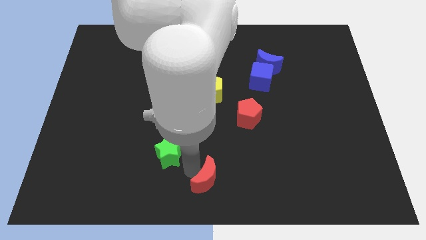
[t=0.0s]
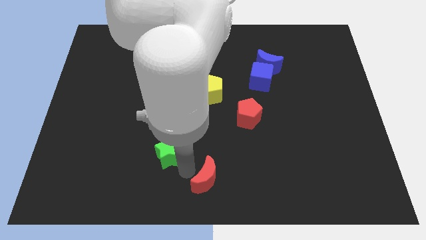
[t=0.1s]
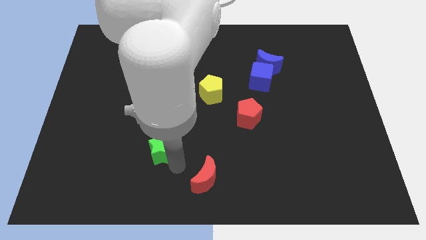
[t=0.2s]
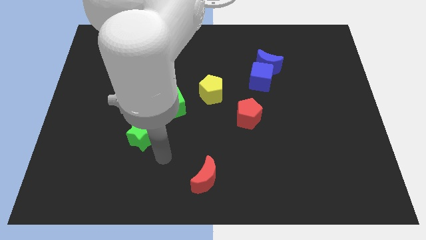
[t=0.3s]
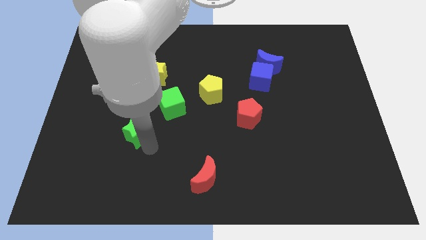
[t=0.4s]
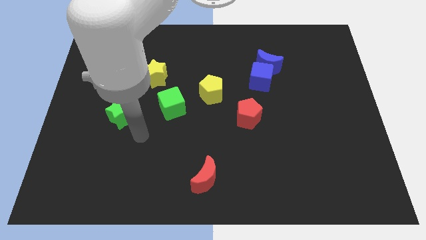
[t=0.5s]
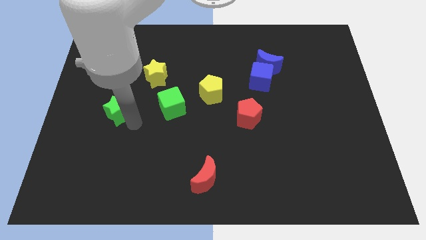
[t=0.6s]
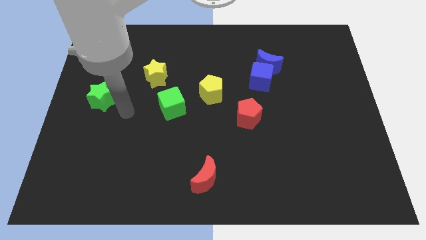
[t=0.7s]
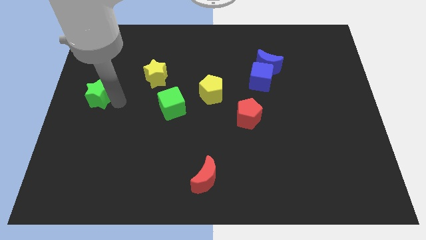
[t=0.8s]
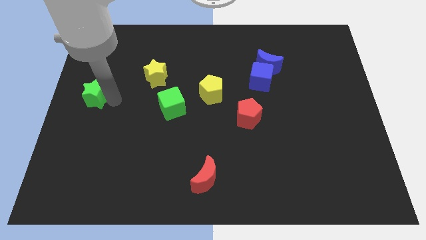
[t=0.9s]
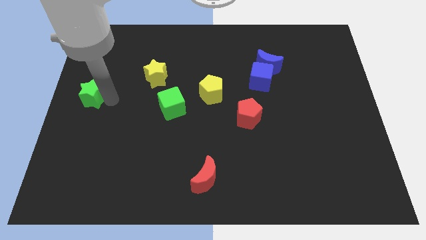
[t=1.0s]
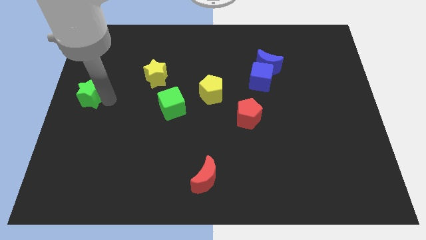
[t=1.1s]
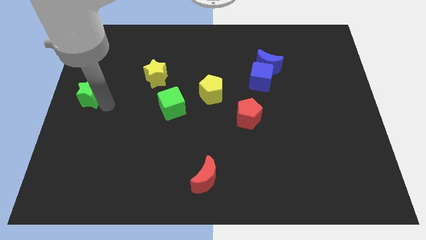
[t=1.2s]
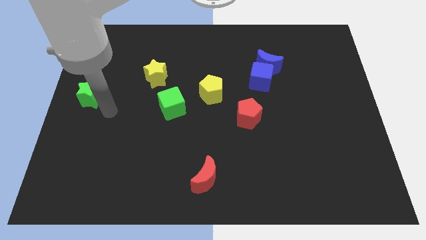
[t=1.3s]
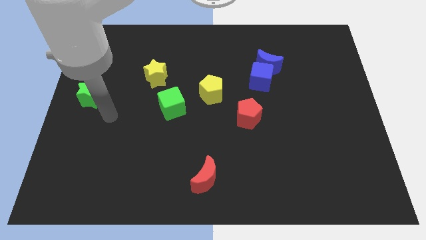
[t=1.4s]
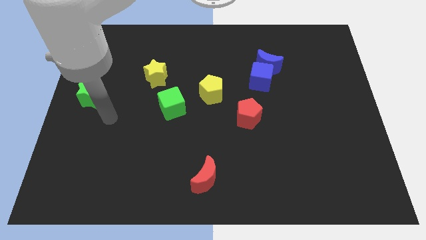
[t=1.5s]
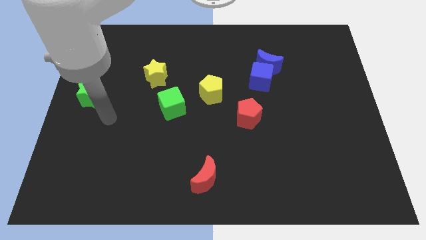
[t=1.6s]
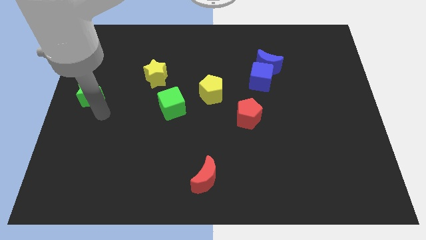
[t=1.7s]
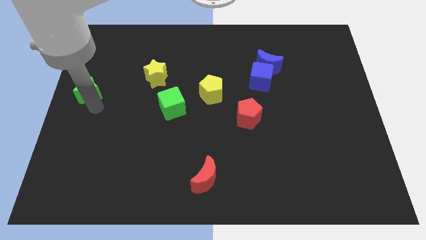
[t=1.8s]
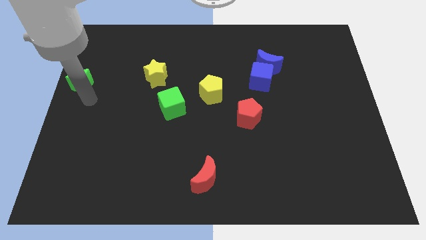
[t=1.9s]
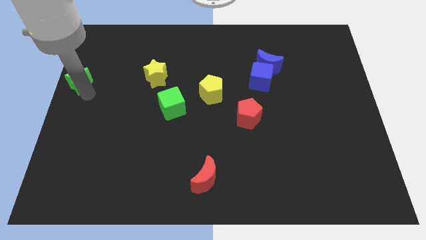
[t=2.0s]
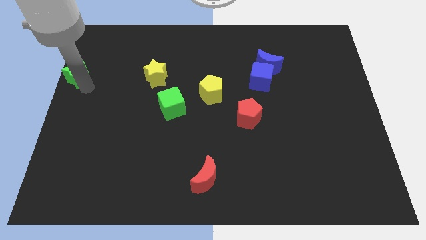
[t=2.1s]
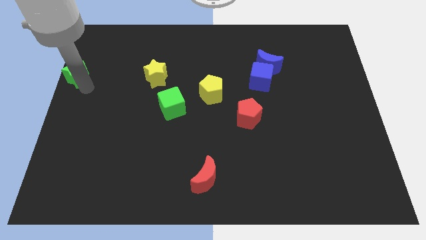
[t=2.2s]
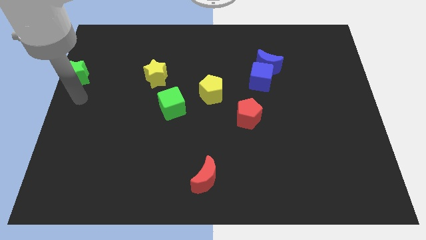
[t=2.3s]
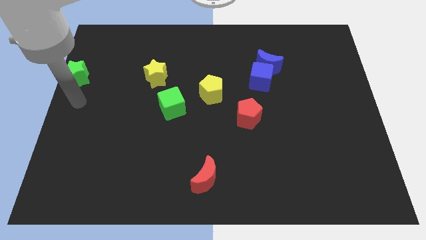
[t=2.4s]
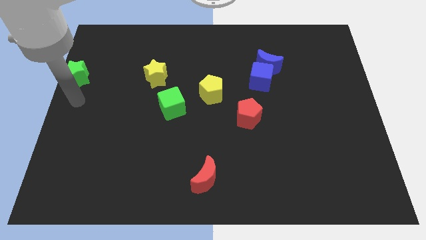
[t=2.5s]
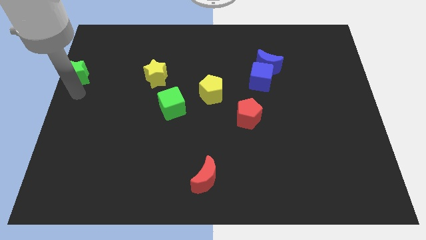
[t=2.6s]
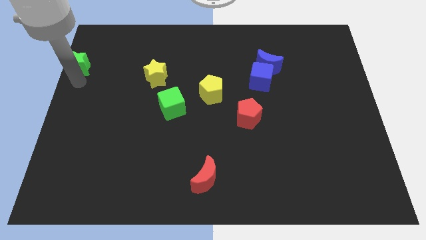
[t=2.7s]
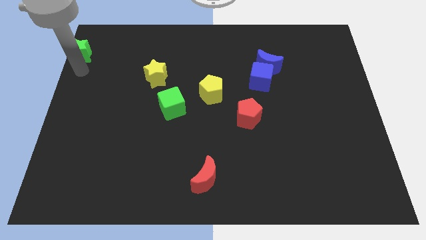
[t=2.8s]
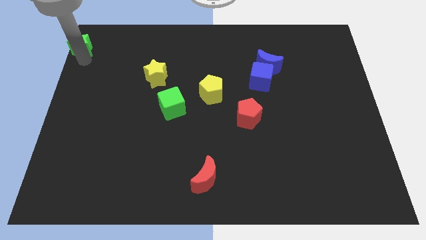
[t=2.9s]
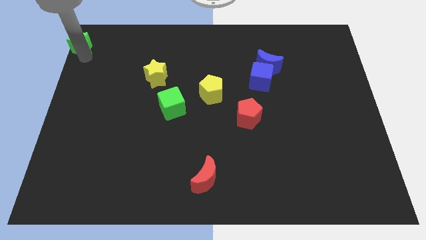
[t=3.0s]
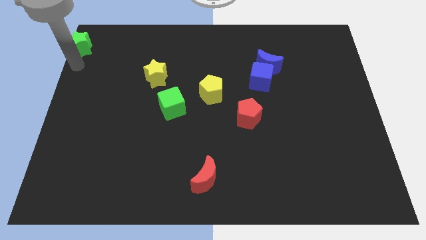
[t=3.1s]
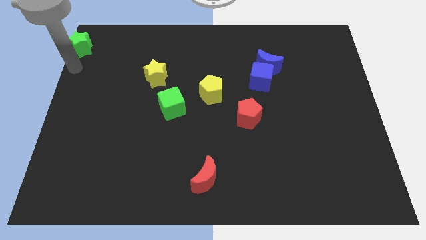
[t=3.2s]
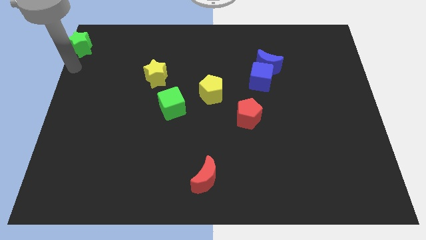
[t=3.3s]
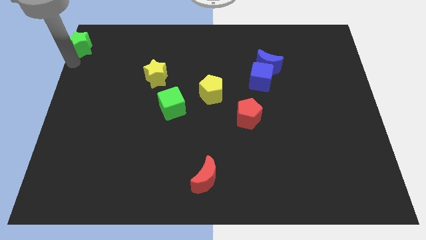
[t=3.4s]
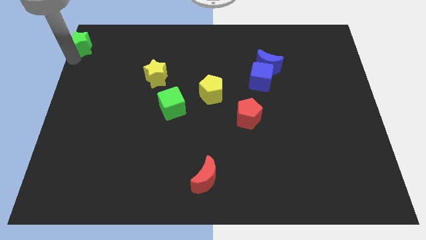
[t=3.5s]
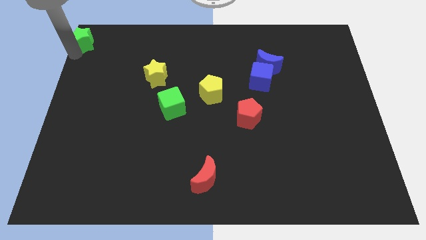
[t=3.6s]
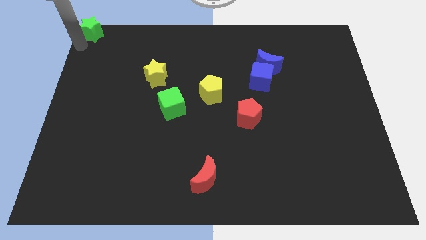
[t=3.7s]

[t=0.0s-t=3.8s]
move the green star to the top left of the board

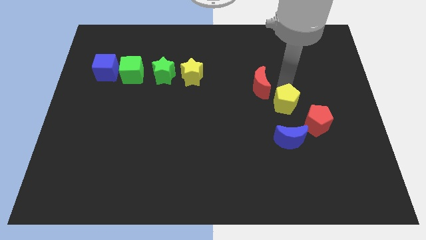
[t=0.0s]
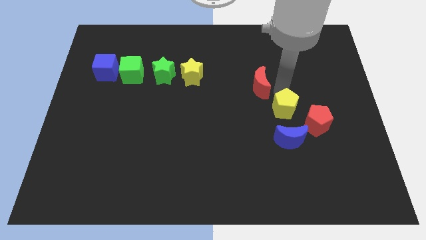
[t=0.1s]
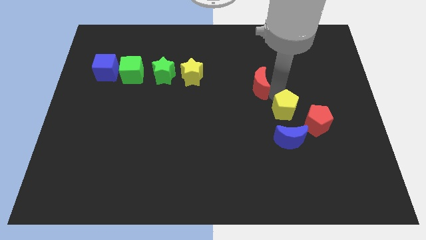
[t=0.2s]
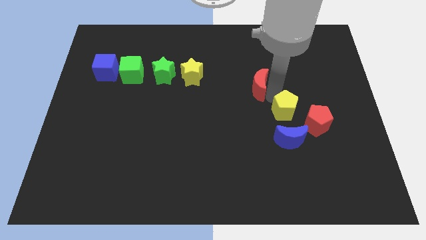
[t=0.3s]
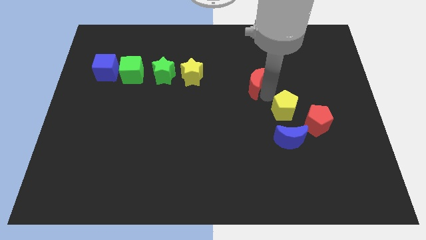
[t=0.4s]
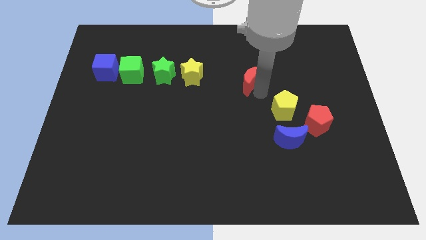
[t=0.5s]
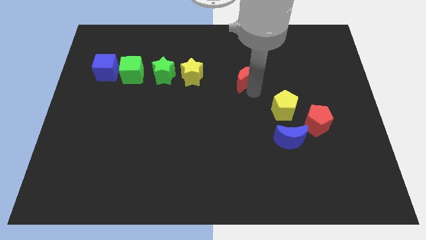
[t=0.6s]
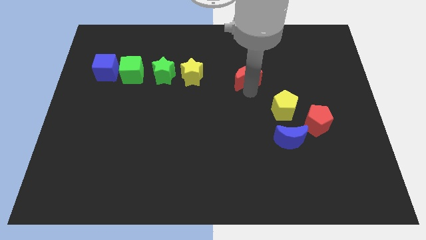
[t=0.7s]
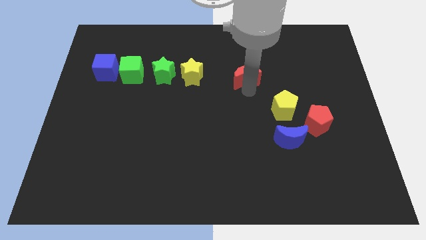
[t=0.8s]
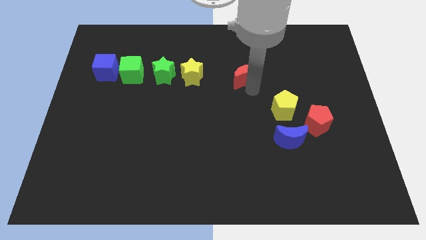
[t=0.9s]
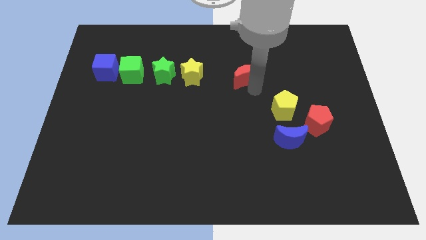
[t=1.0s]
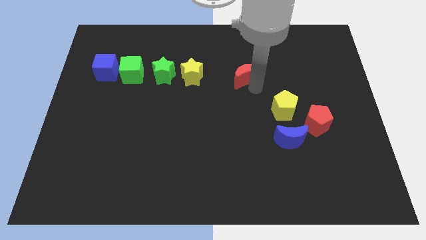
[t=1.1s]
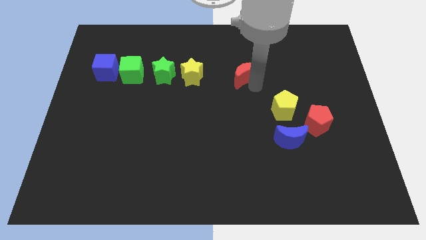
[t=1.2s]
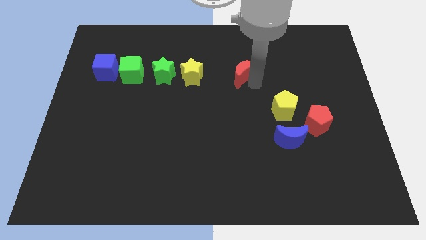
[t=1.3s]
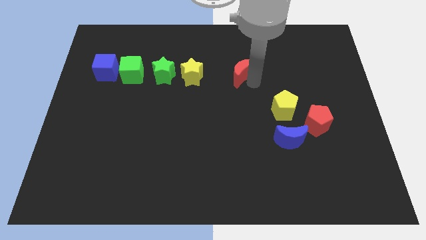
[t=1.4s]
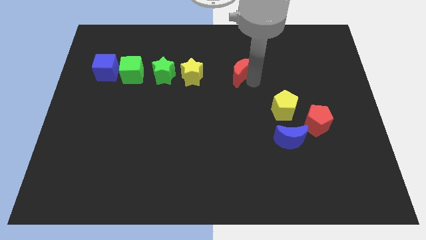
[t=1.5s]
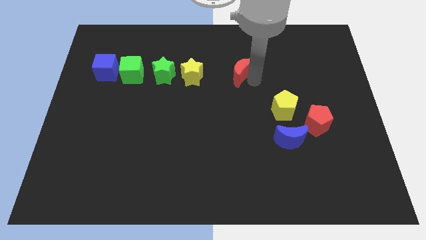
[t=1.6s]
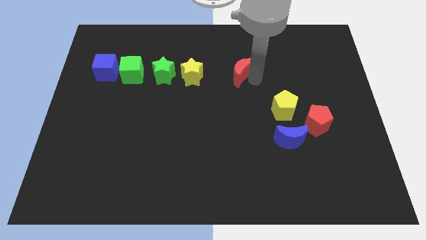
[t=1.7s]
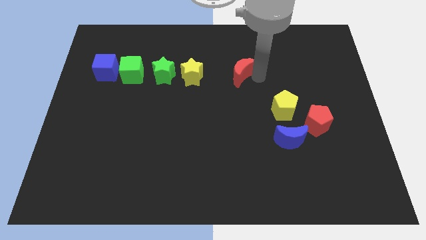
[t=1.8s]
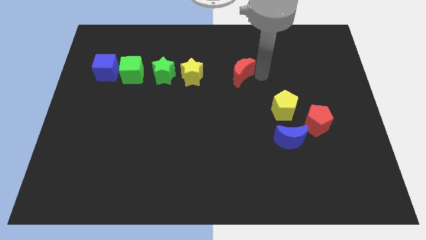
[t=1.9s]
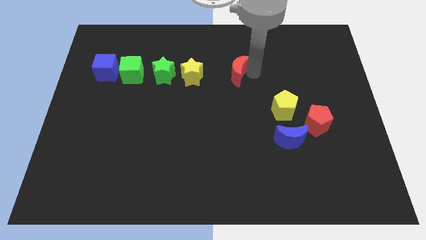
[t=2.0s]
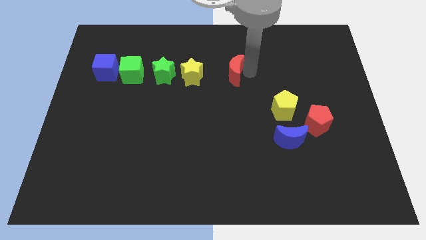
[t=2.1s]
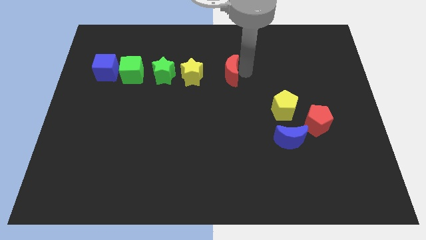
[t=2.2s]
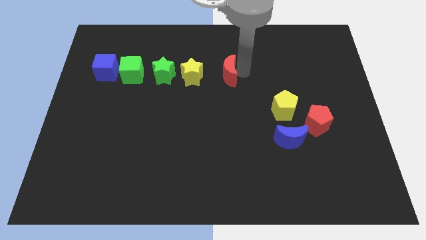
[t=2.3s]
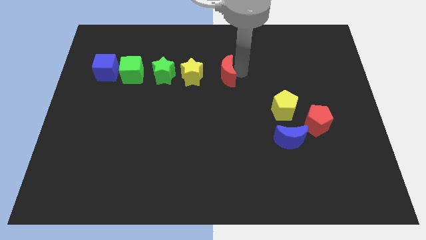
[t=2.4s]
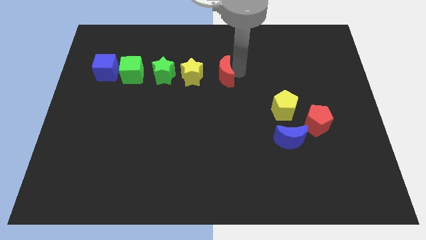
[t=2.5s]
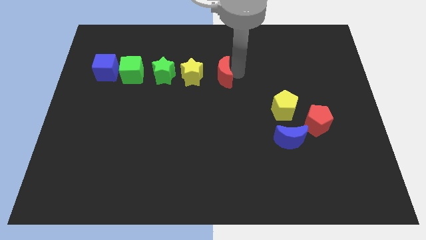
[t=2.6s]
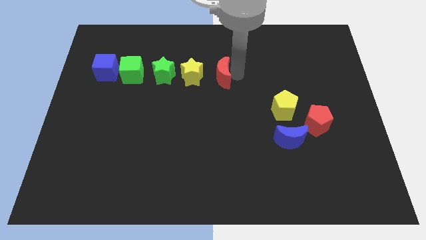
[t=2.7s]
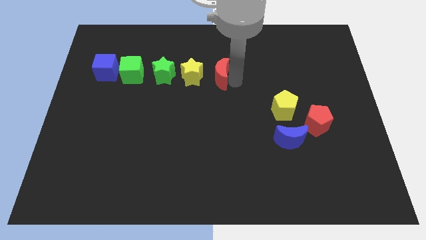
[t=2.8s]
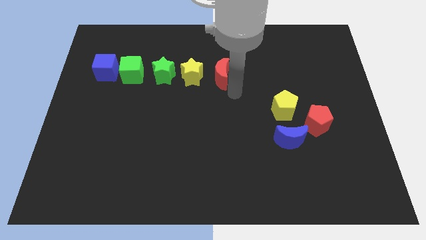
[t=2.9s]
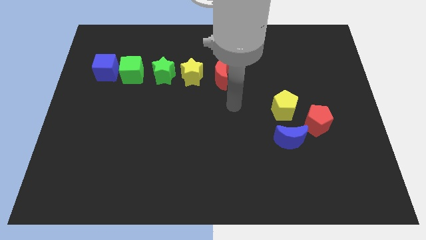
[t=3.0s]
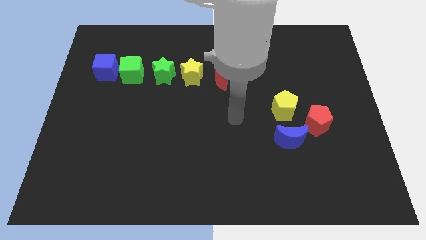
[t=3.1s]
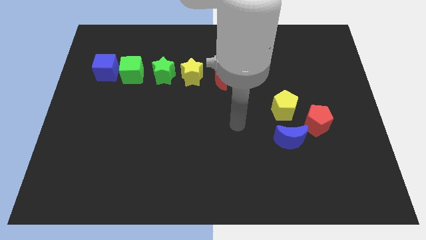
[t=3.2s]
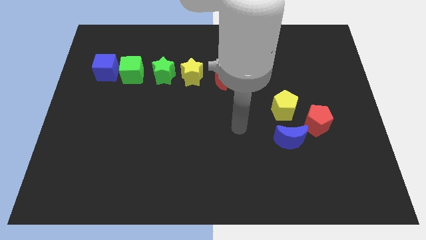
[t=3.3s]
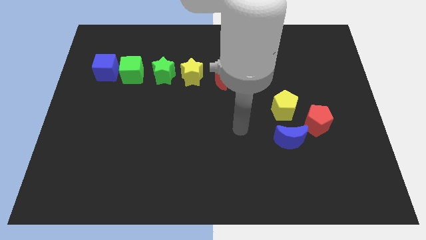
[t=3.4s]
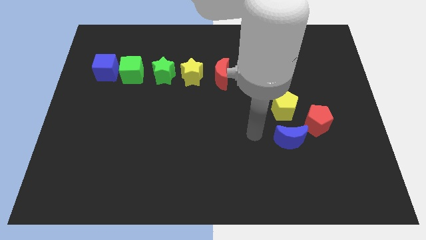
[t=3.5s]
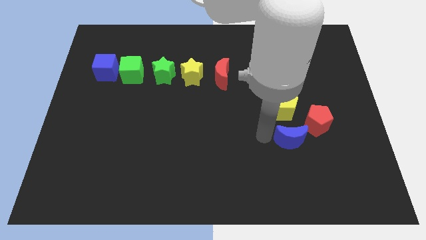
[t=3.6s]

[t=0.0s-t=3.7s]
place the red moon beside the yellow star to form a line

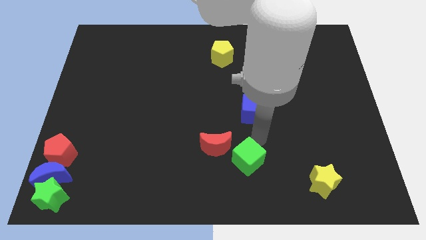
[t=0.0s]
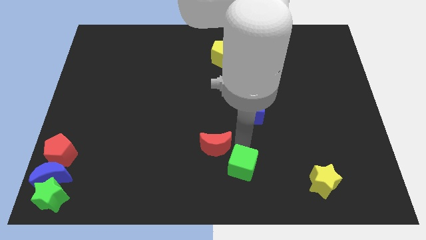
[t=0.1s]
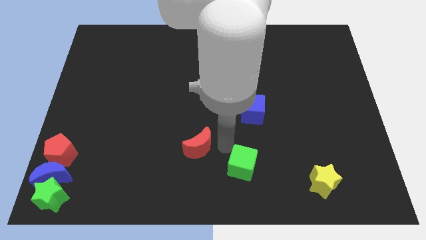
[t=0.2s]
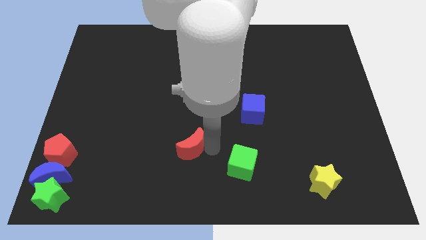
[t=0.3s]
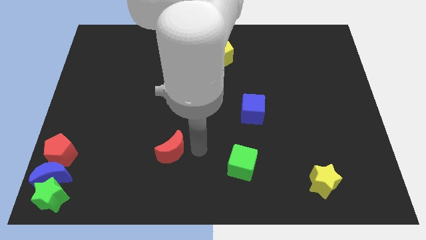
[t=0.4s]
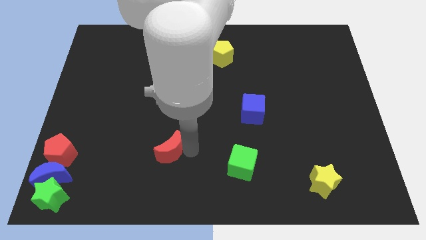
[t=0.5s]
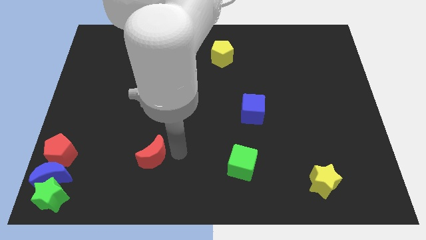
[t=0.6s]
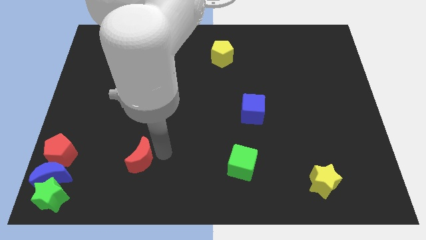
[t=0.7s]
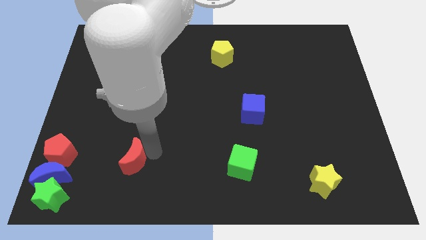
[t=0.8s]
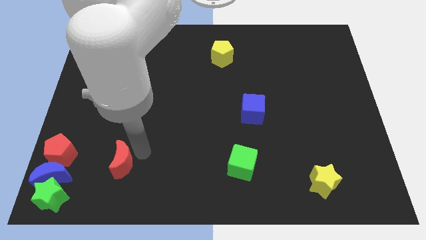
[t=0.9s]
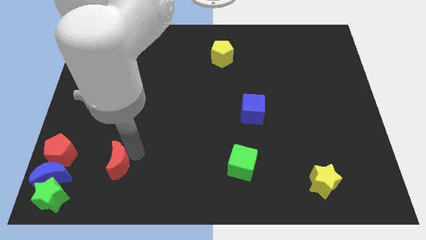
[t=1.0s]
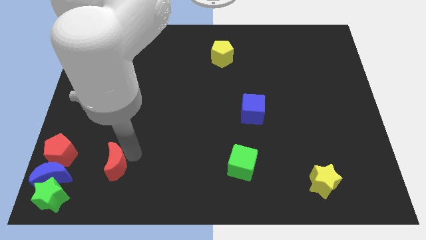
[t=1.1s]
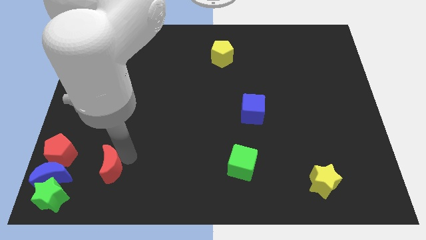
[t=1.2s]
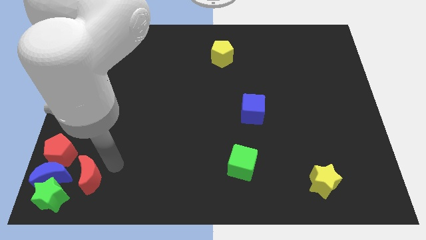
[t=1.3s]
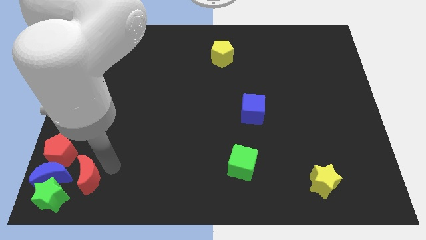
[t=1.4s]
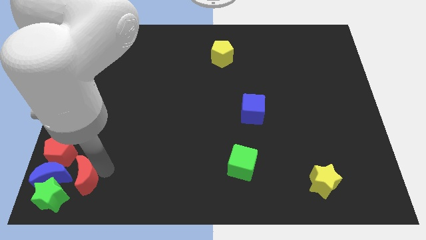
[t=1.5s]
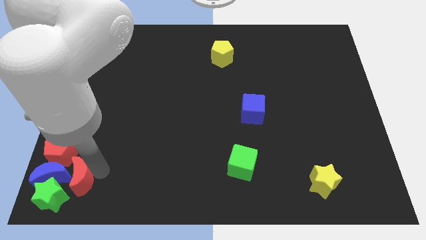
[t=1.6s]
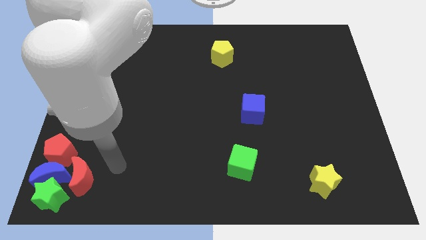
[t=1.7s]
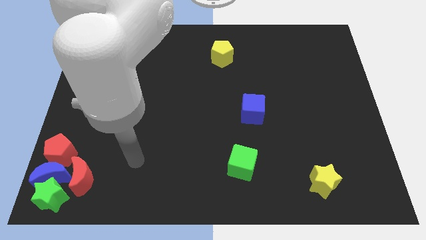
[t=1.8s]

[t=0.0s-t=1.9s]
push red moon right to blue moon
